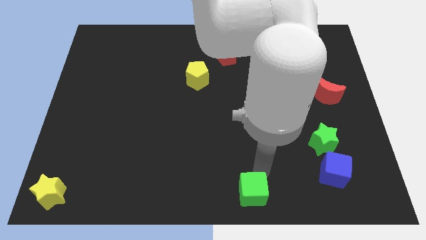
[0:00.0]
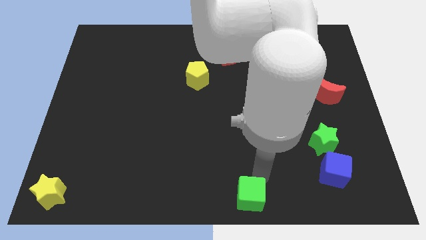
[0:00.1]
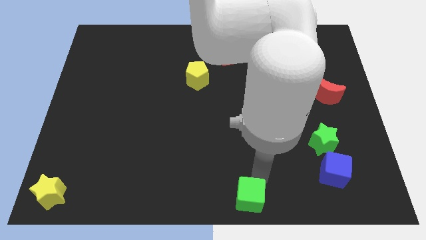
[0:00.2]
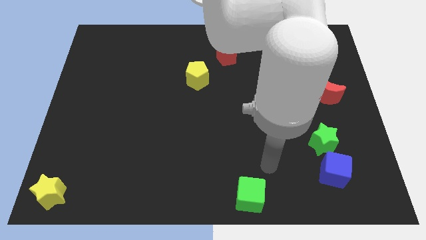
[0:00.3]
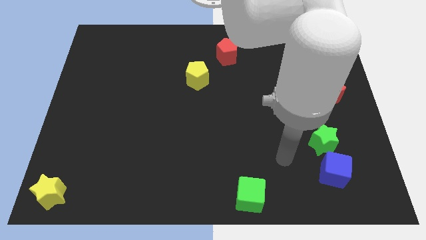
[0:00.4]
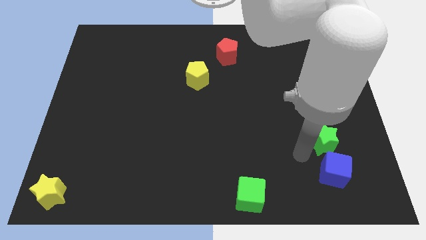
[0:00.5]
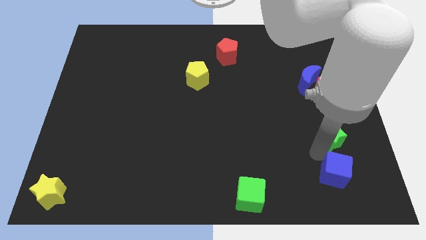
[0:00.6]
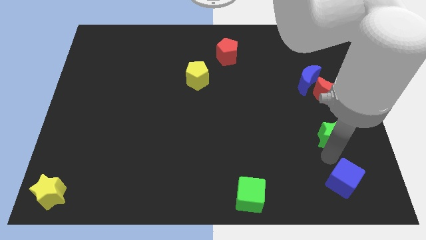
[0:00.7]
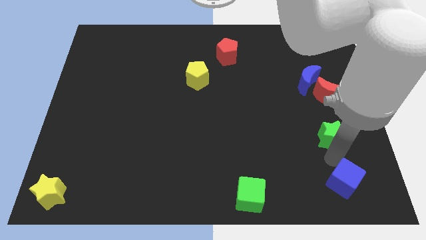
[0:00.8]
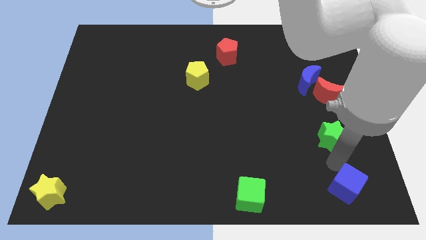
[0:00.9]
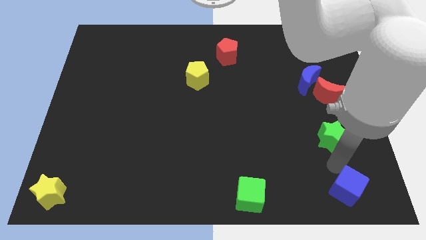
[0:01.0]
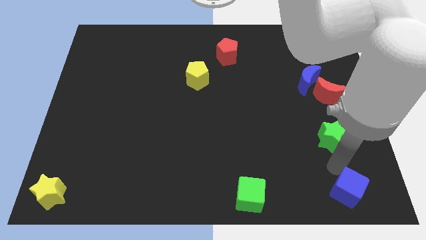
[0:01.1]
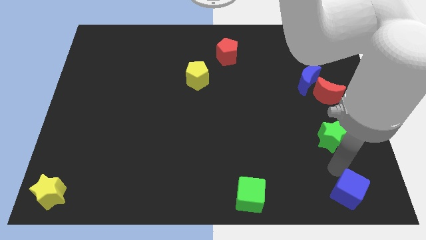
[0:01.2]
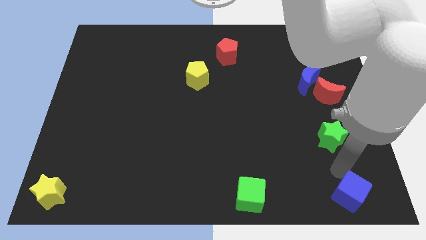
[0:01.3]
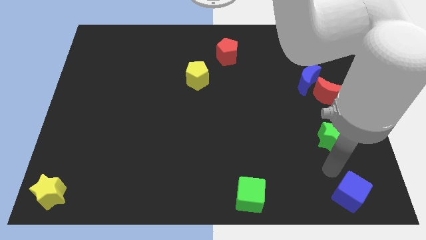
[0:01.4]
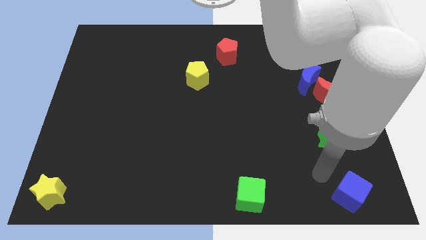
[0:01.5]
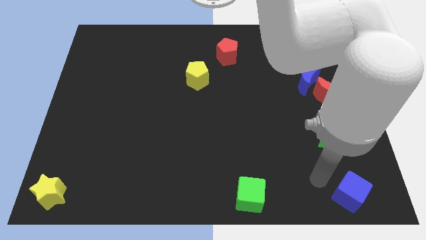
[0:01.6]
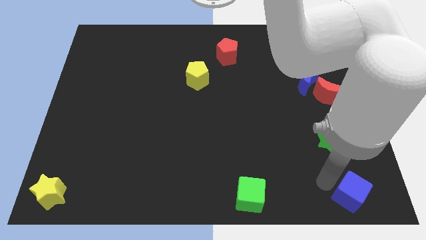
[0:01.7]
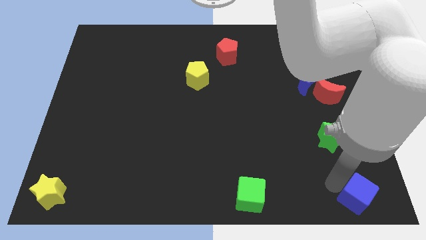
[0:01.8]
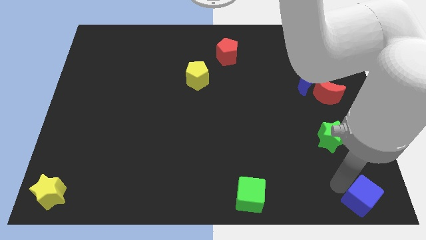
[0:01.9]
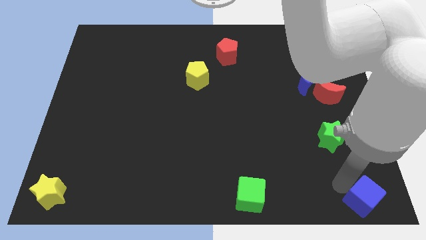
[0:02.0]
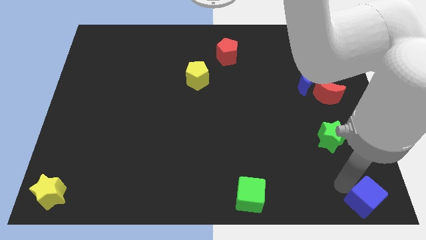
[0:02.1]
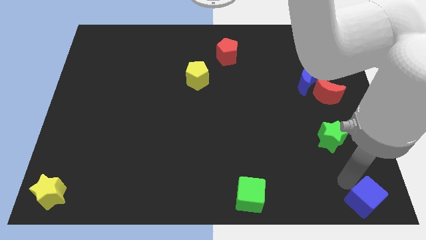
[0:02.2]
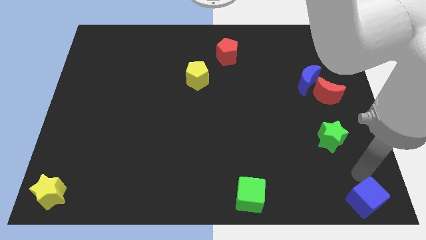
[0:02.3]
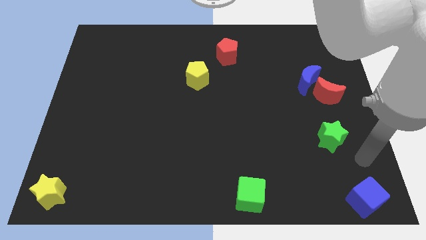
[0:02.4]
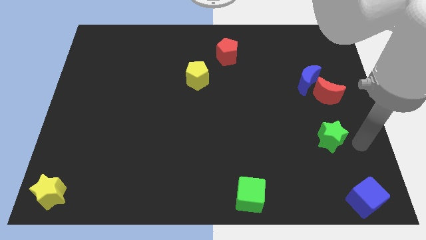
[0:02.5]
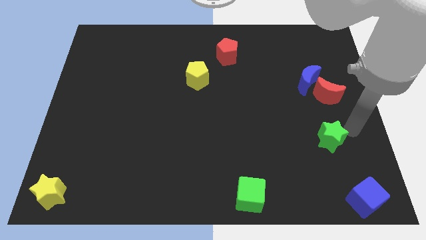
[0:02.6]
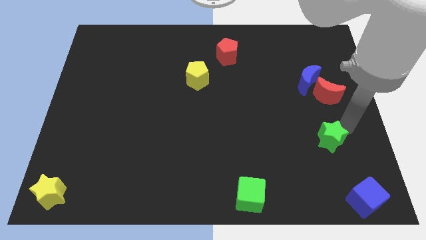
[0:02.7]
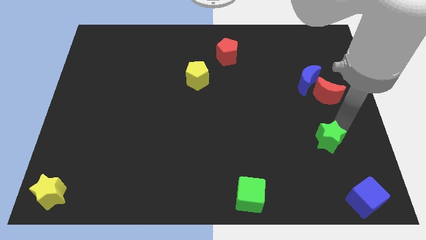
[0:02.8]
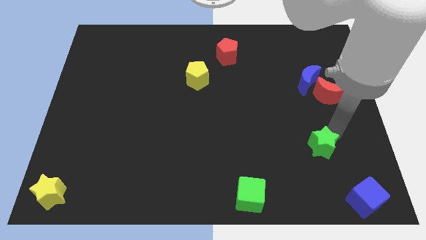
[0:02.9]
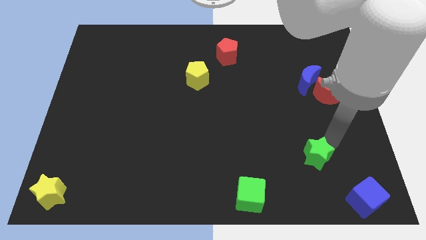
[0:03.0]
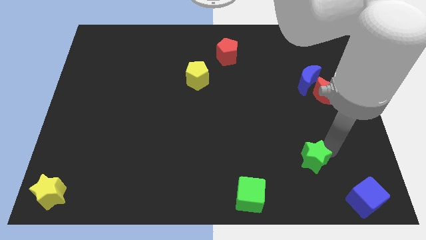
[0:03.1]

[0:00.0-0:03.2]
drag the blue cube to the bottom right

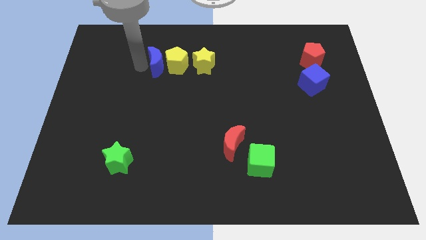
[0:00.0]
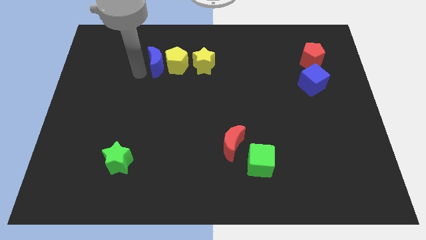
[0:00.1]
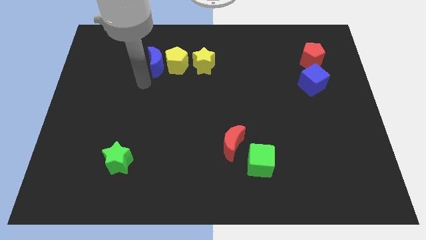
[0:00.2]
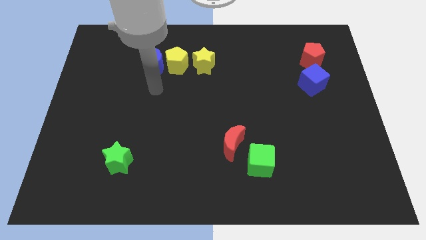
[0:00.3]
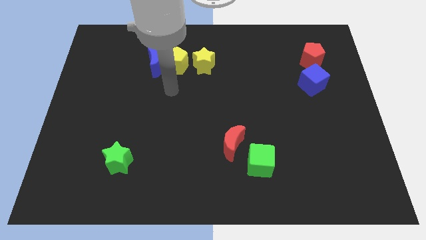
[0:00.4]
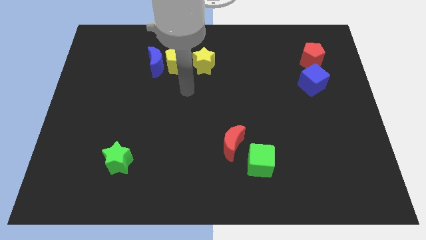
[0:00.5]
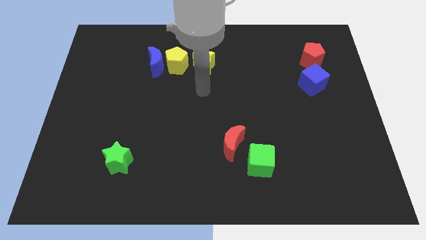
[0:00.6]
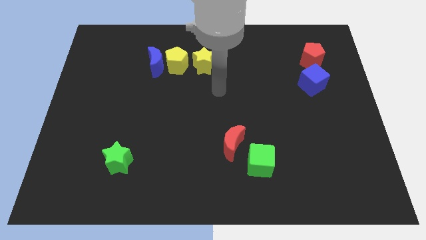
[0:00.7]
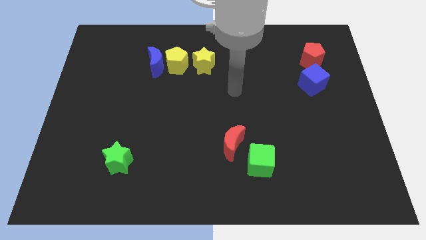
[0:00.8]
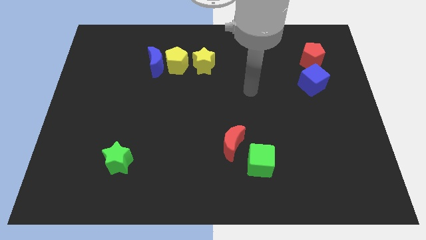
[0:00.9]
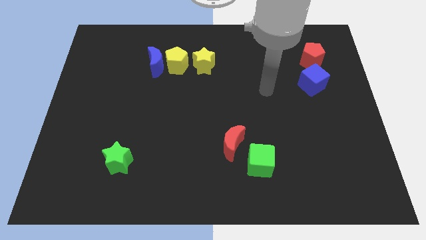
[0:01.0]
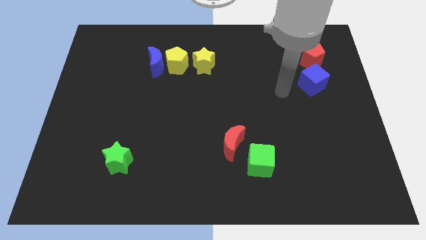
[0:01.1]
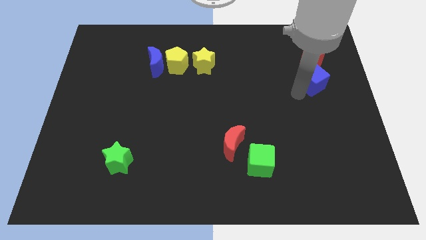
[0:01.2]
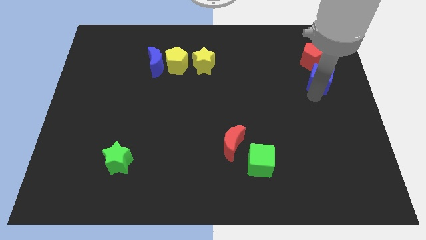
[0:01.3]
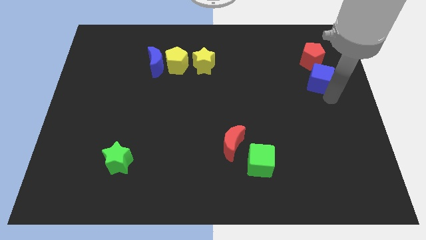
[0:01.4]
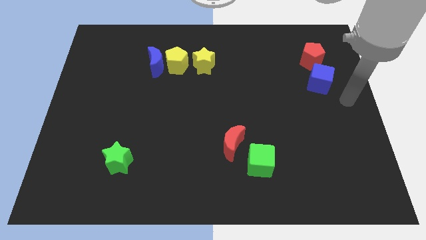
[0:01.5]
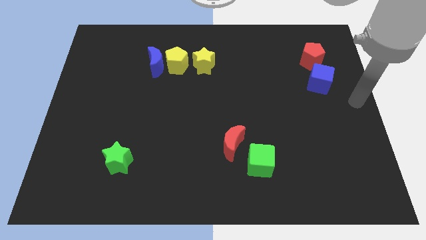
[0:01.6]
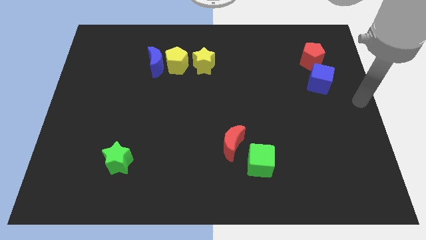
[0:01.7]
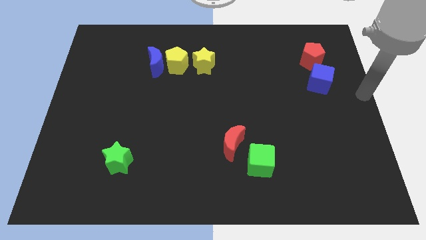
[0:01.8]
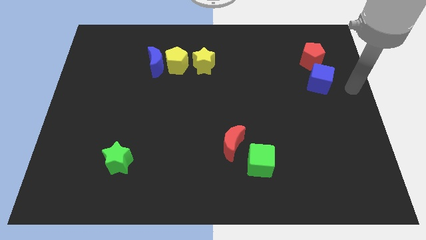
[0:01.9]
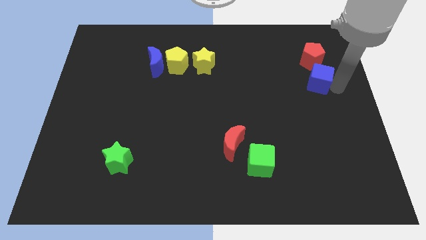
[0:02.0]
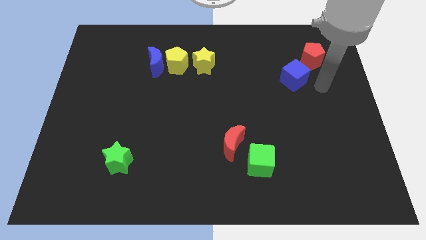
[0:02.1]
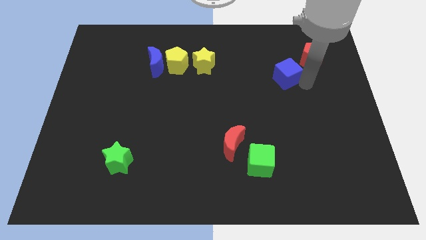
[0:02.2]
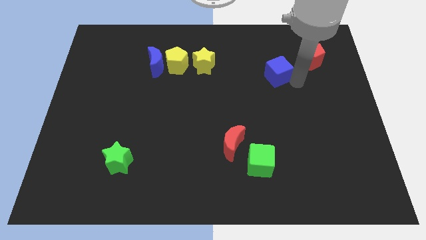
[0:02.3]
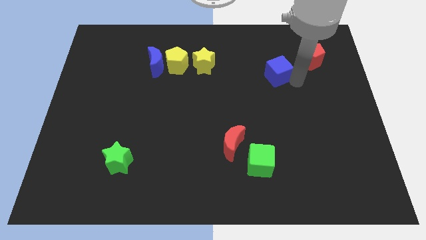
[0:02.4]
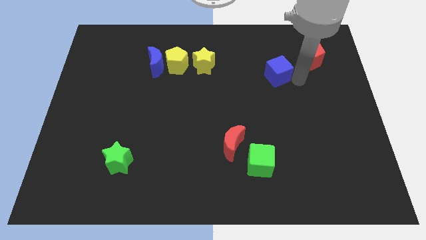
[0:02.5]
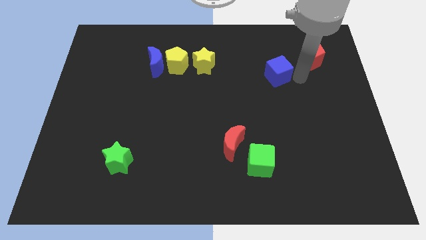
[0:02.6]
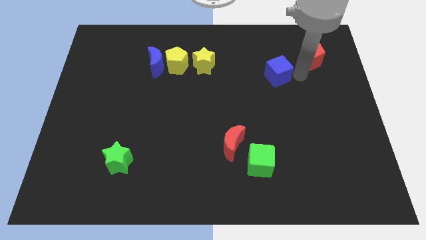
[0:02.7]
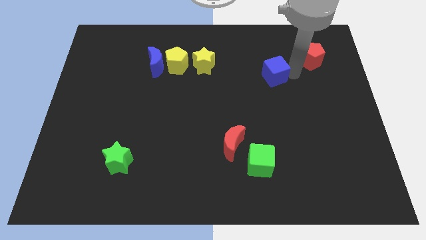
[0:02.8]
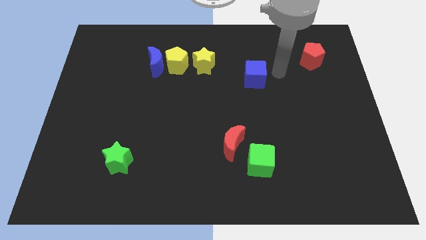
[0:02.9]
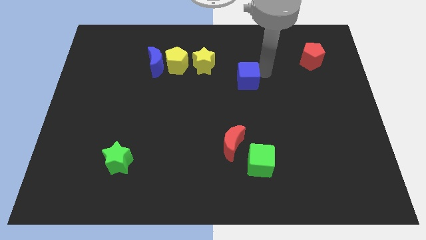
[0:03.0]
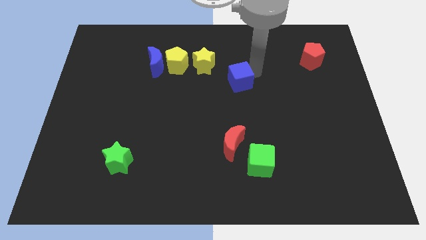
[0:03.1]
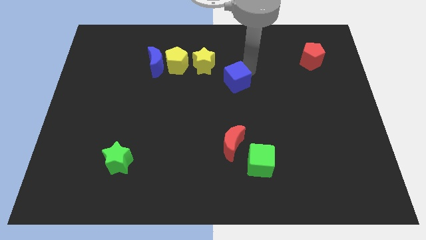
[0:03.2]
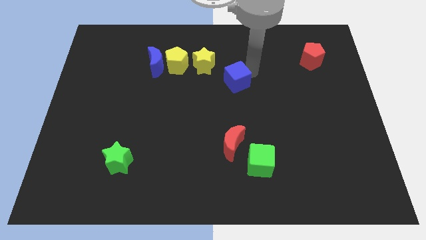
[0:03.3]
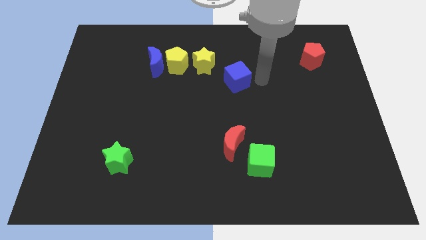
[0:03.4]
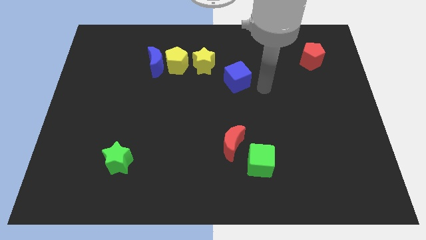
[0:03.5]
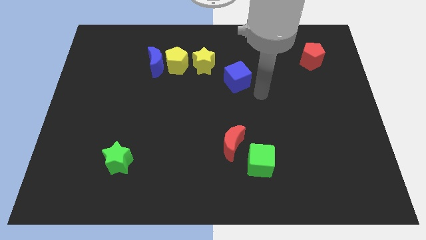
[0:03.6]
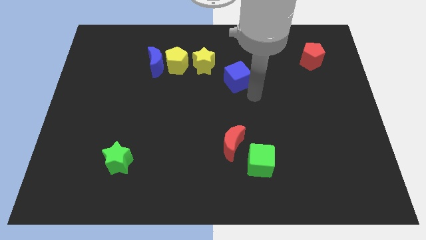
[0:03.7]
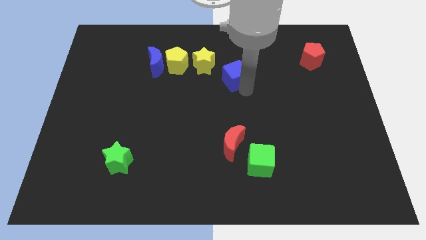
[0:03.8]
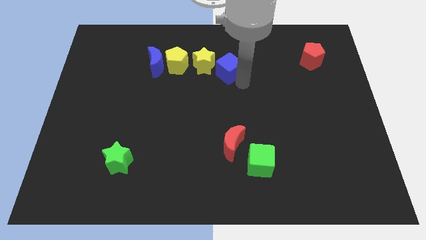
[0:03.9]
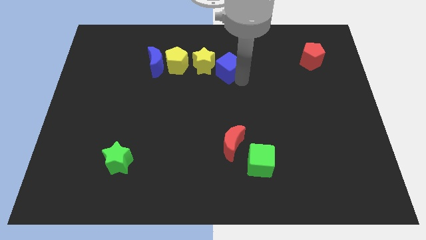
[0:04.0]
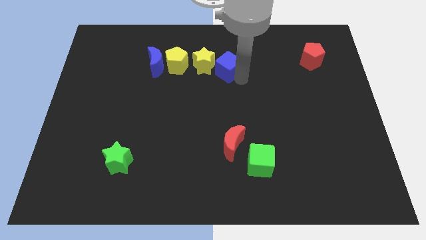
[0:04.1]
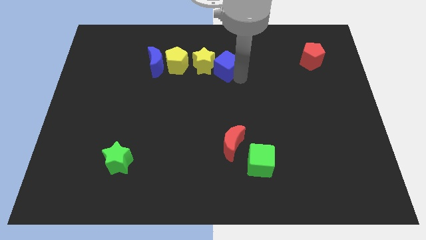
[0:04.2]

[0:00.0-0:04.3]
push the blue cube towards the yellow star

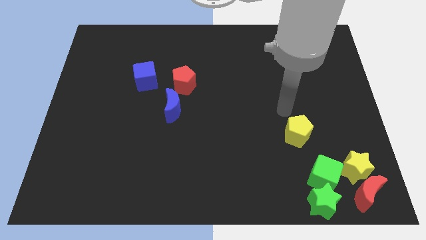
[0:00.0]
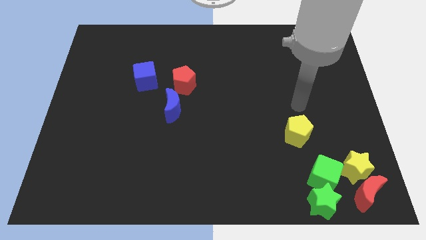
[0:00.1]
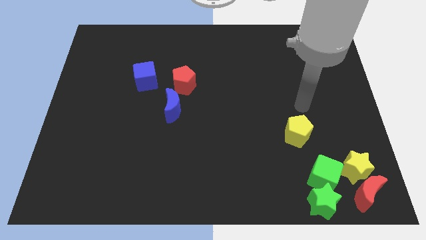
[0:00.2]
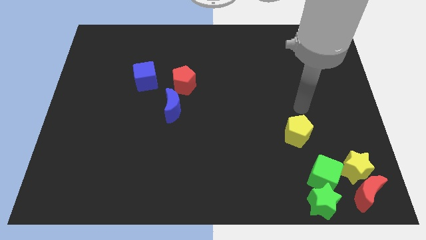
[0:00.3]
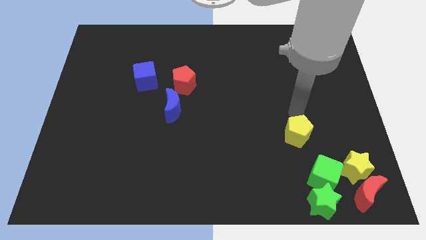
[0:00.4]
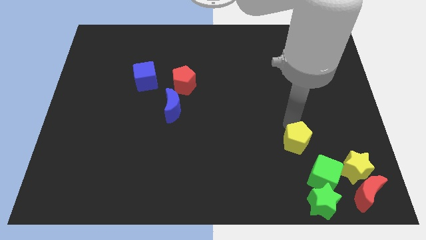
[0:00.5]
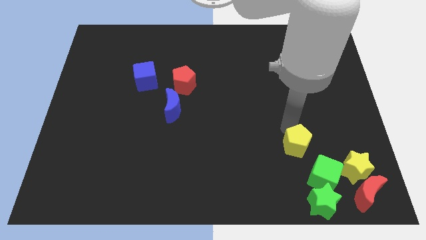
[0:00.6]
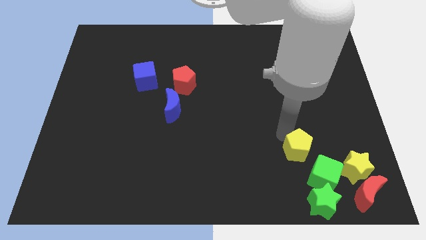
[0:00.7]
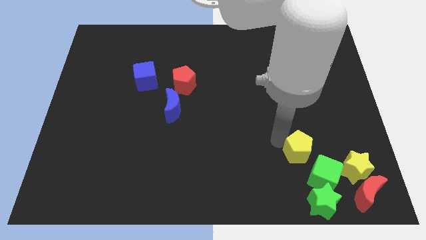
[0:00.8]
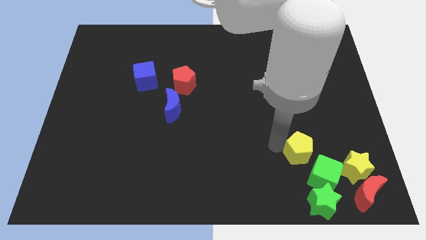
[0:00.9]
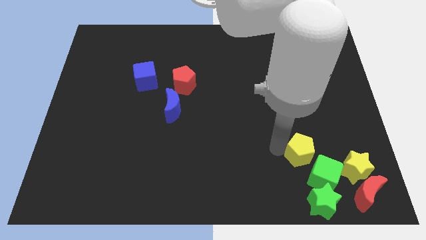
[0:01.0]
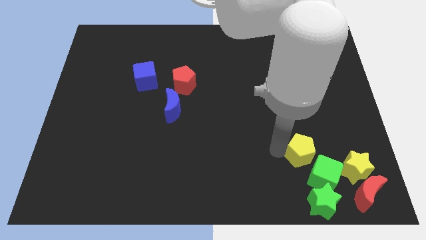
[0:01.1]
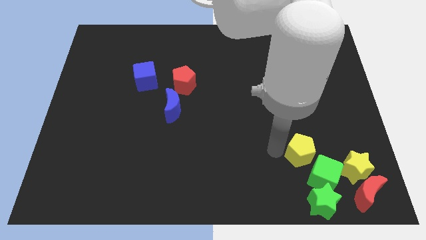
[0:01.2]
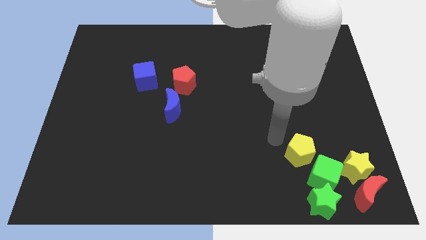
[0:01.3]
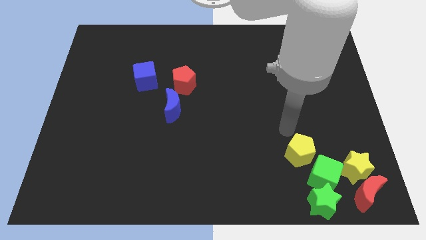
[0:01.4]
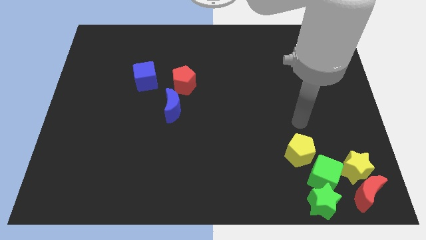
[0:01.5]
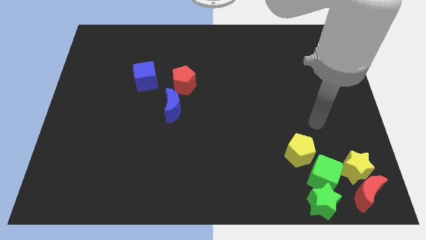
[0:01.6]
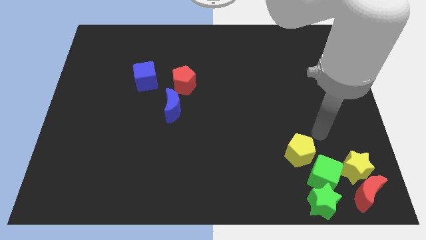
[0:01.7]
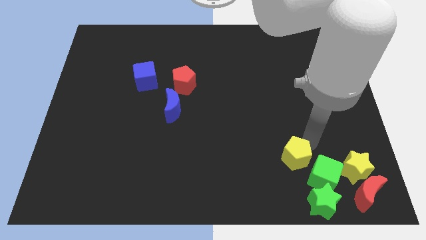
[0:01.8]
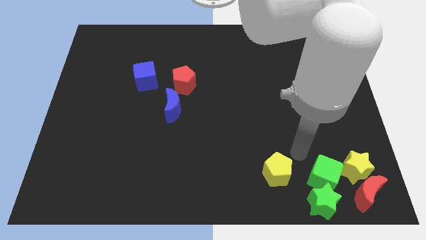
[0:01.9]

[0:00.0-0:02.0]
move the yellow pentagon left to the green cube
